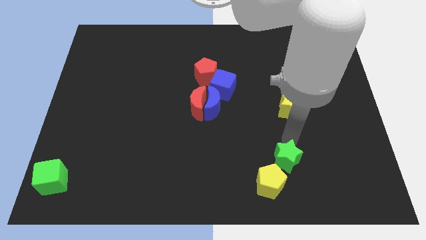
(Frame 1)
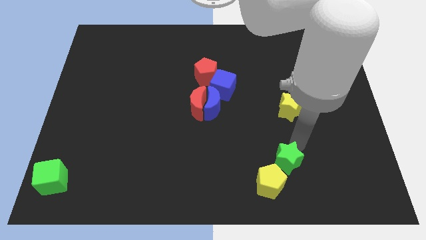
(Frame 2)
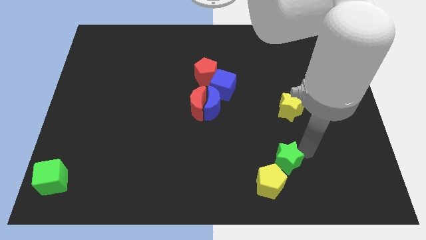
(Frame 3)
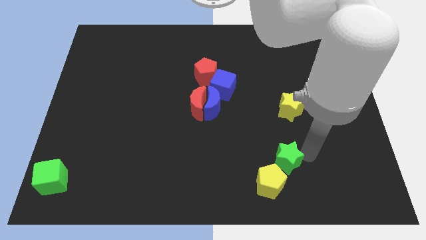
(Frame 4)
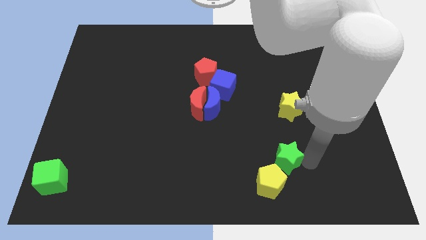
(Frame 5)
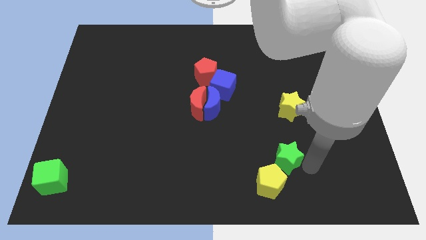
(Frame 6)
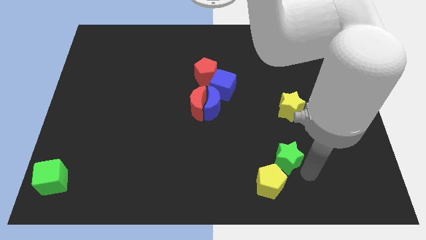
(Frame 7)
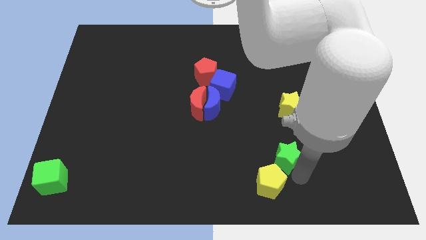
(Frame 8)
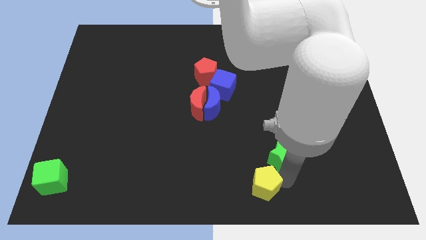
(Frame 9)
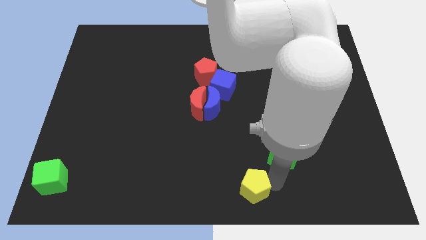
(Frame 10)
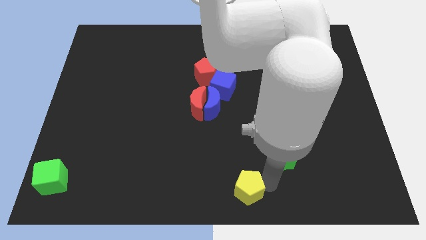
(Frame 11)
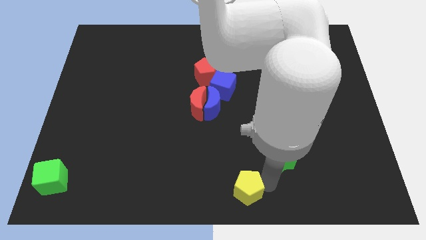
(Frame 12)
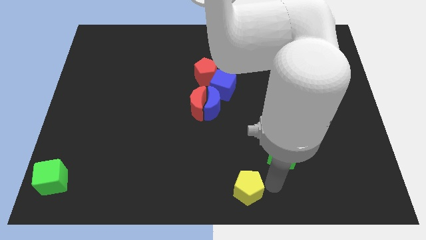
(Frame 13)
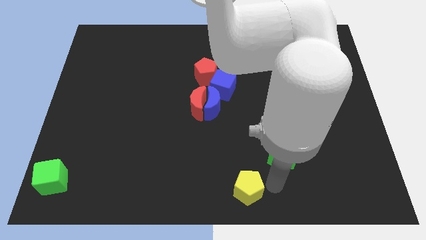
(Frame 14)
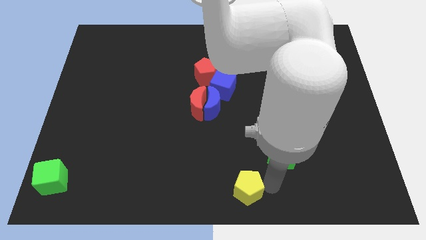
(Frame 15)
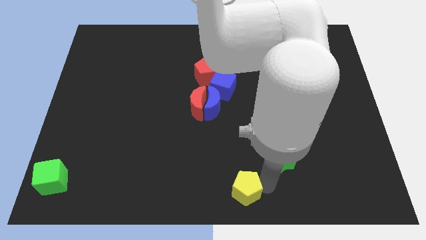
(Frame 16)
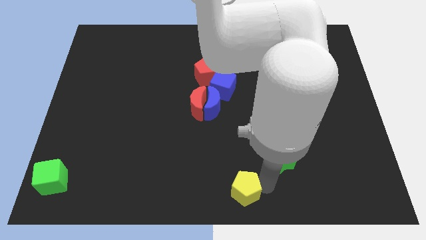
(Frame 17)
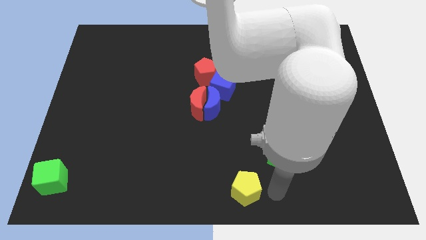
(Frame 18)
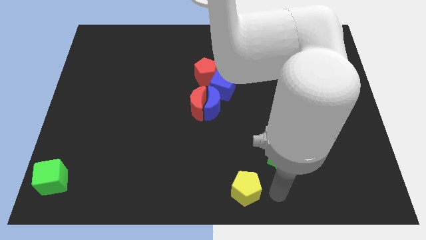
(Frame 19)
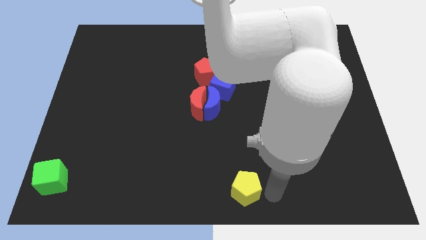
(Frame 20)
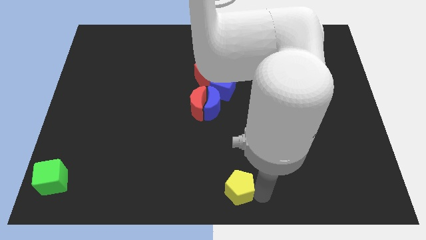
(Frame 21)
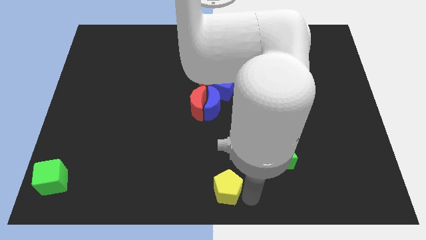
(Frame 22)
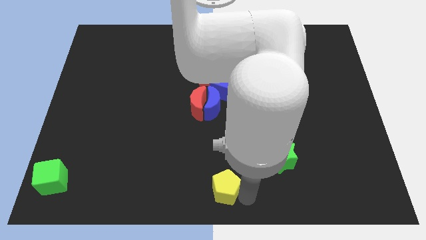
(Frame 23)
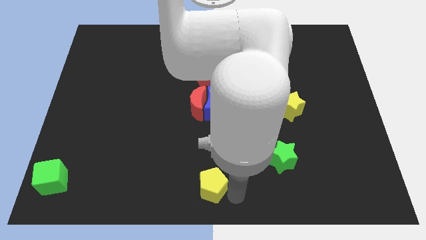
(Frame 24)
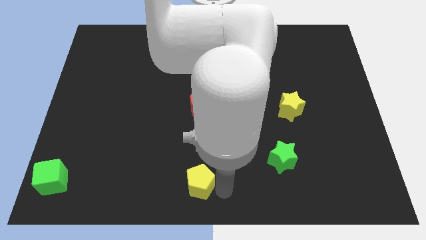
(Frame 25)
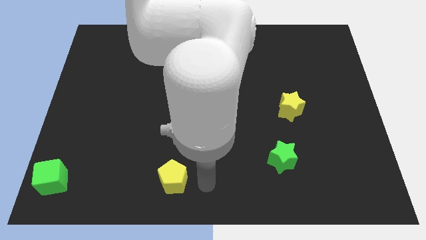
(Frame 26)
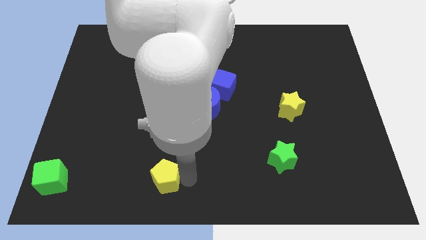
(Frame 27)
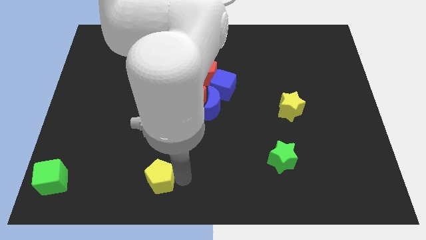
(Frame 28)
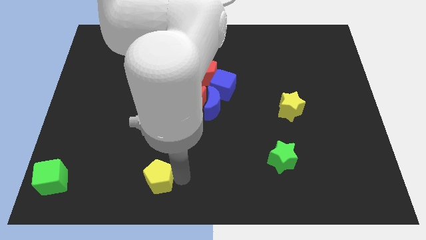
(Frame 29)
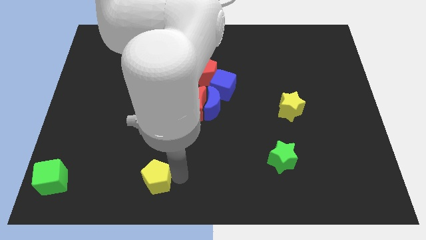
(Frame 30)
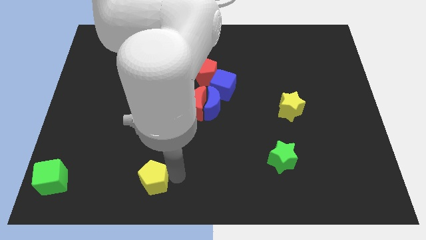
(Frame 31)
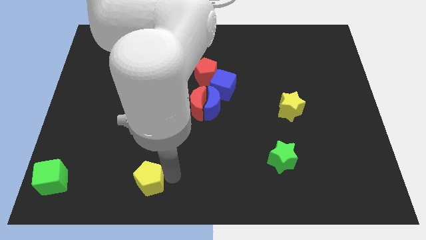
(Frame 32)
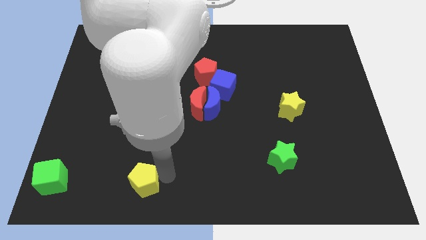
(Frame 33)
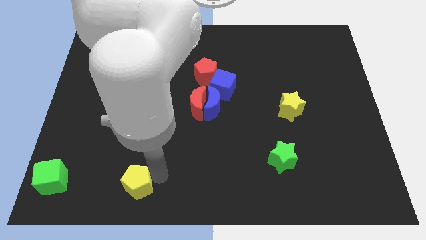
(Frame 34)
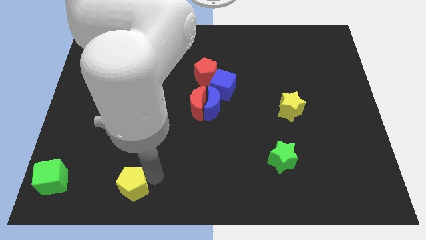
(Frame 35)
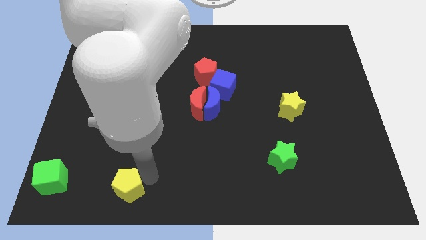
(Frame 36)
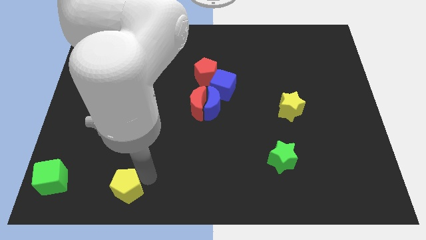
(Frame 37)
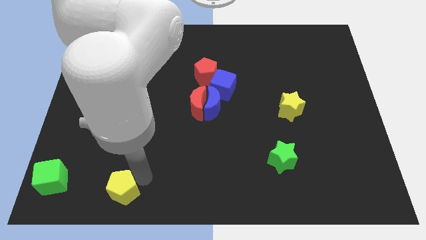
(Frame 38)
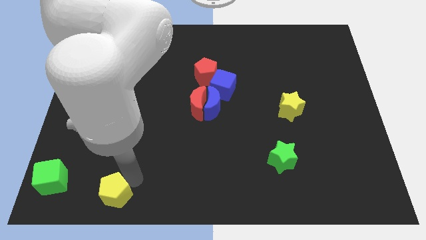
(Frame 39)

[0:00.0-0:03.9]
separate the yellow pentagon from the green star

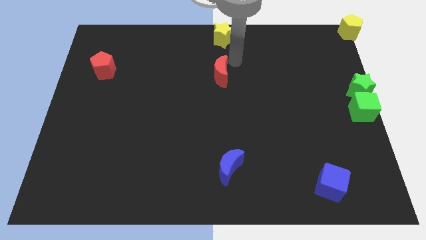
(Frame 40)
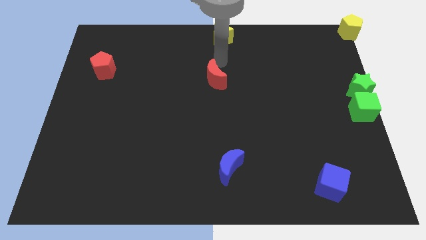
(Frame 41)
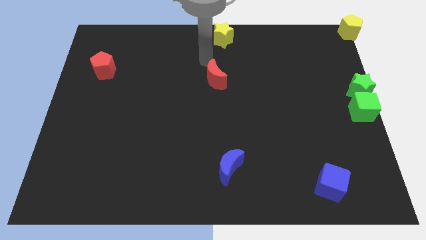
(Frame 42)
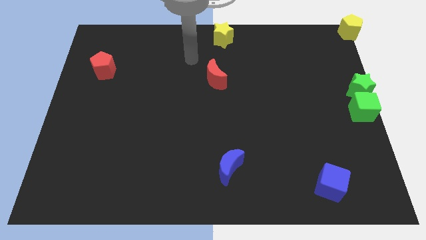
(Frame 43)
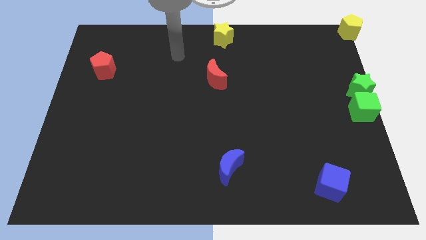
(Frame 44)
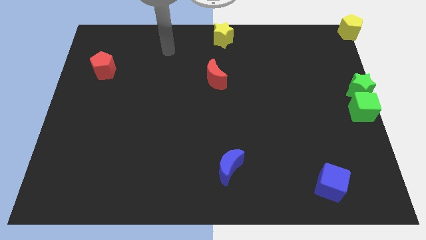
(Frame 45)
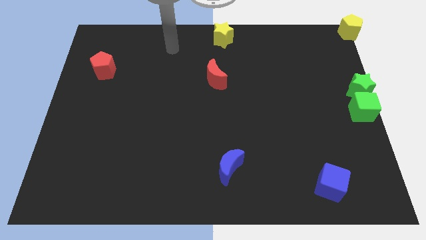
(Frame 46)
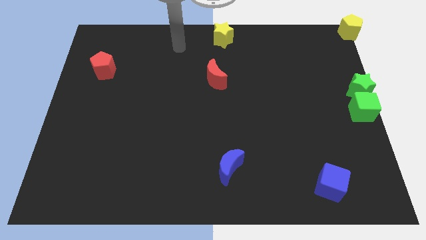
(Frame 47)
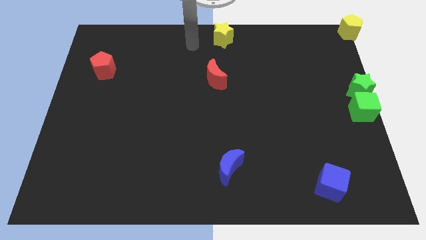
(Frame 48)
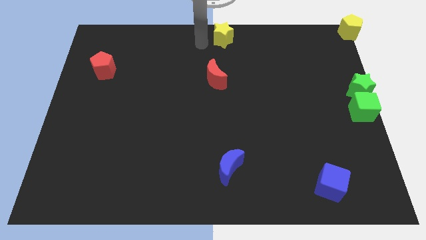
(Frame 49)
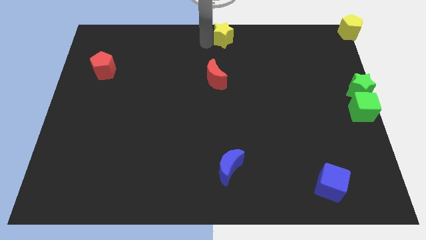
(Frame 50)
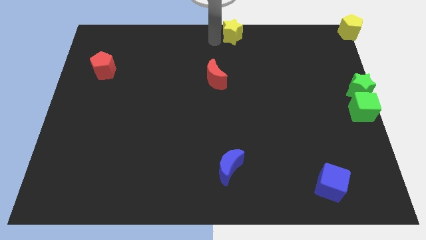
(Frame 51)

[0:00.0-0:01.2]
move your arm away from the red moon

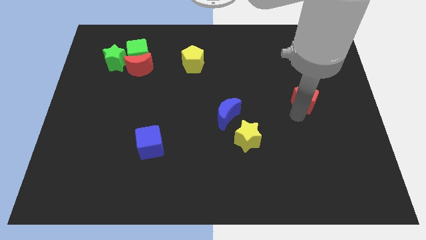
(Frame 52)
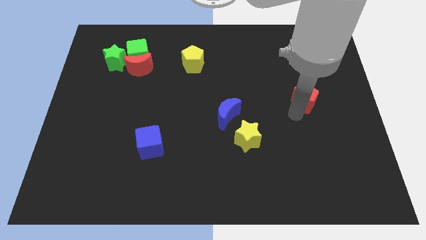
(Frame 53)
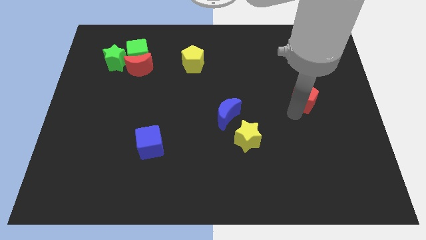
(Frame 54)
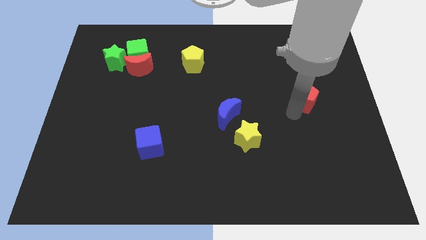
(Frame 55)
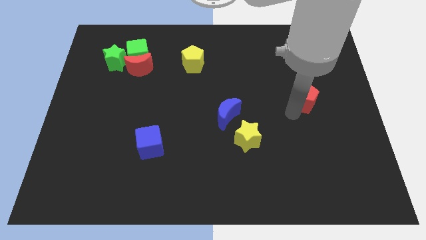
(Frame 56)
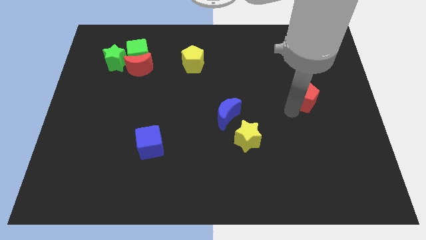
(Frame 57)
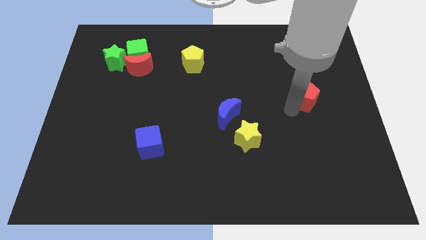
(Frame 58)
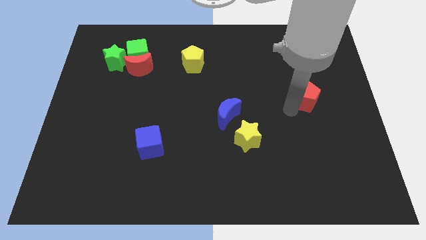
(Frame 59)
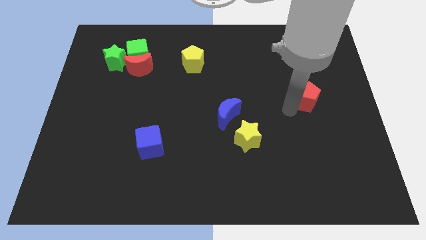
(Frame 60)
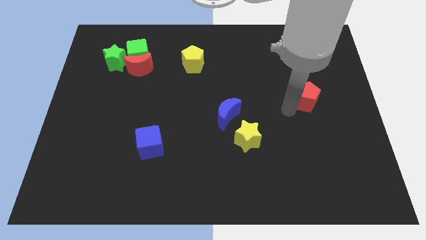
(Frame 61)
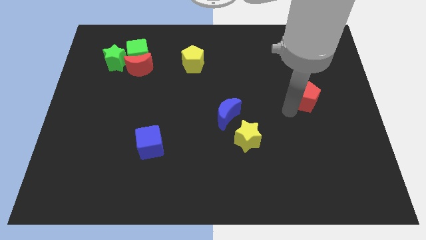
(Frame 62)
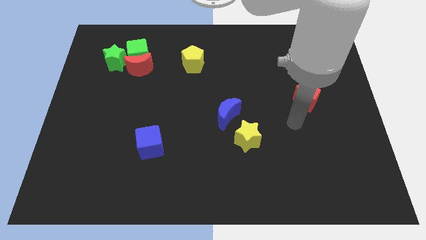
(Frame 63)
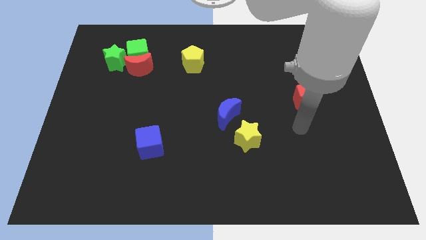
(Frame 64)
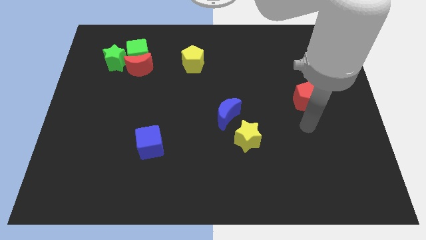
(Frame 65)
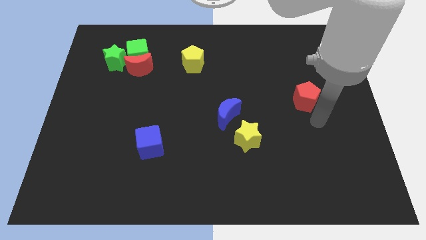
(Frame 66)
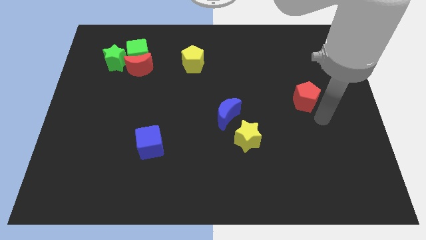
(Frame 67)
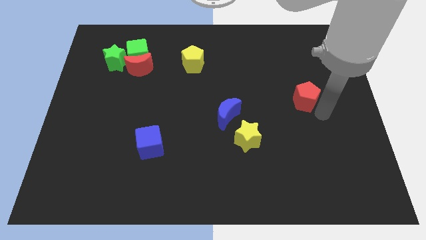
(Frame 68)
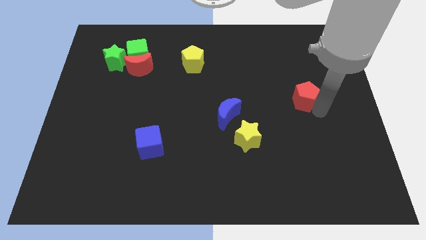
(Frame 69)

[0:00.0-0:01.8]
slide red pentagon towards the blue moon

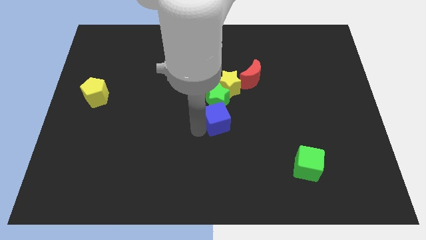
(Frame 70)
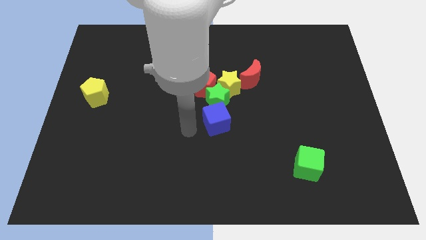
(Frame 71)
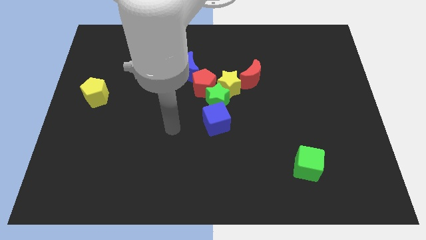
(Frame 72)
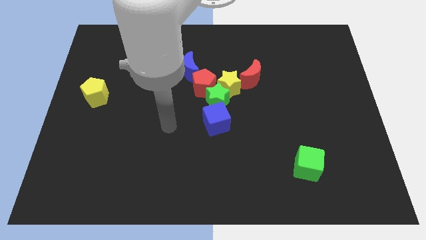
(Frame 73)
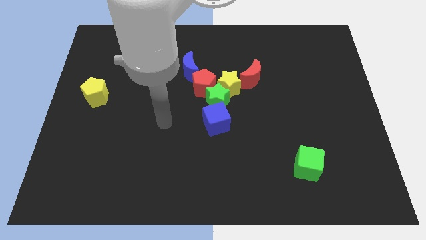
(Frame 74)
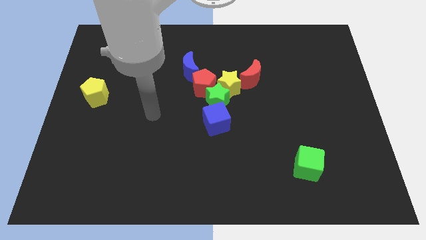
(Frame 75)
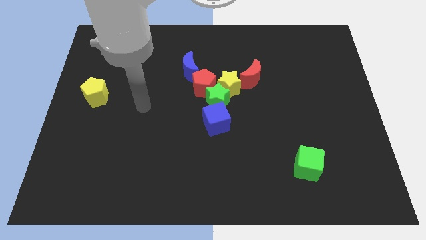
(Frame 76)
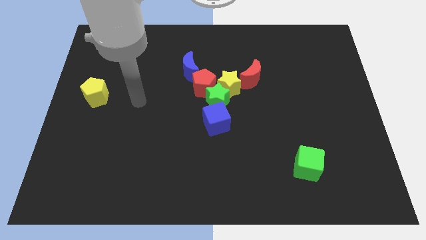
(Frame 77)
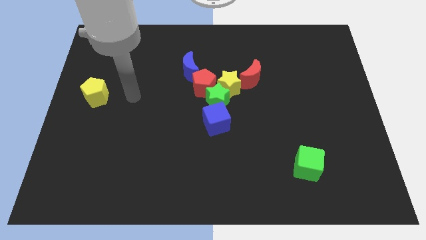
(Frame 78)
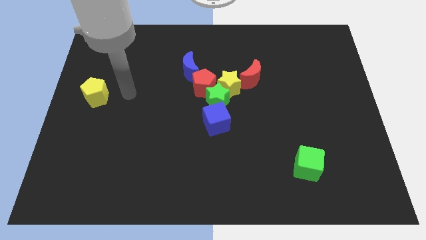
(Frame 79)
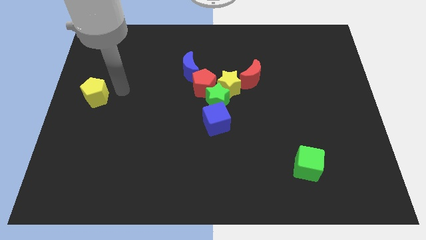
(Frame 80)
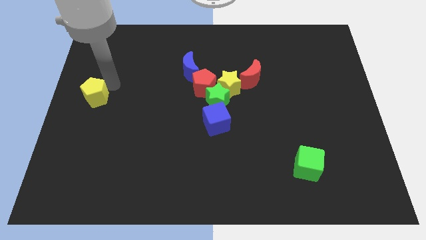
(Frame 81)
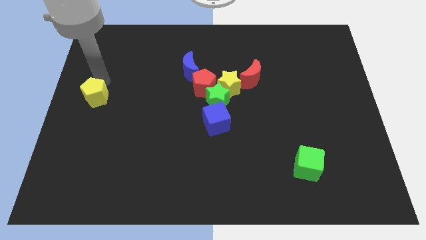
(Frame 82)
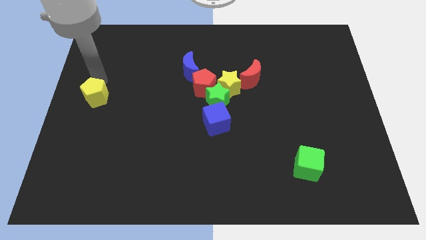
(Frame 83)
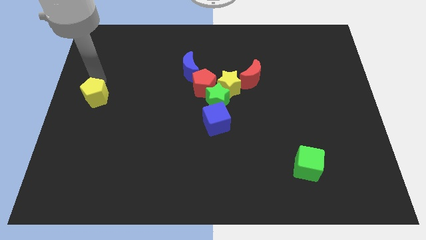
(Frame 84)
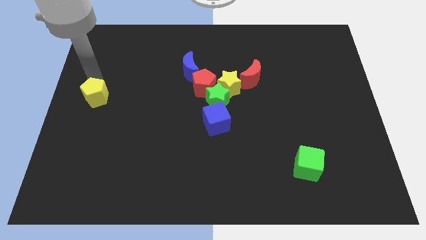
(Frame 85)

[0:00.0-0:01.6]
move the arm to the top of the yellow pentagon

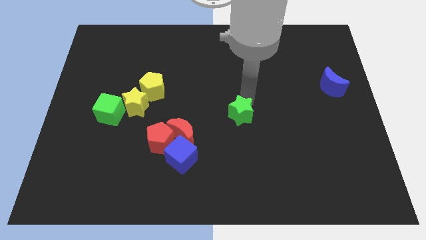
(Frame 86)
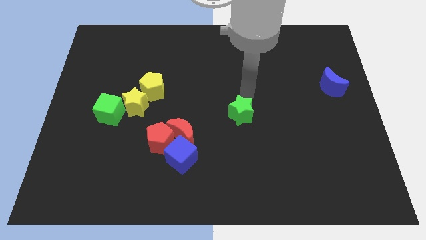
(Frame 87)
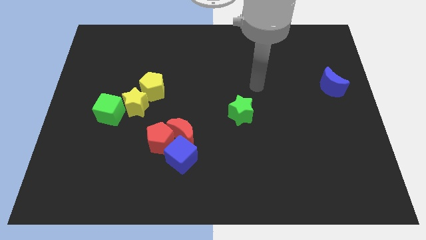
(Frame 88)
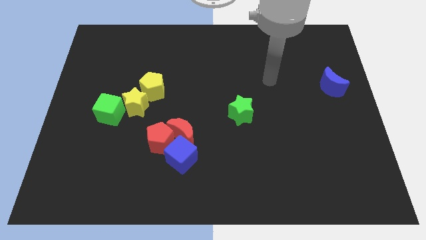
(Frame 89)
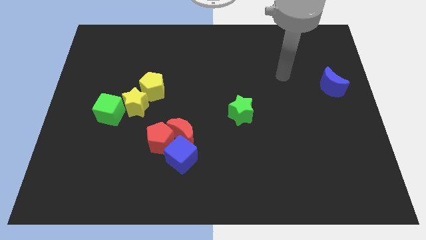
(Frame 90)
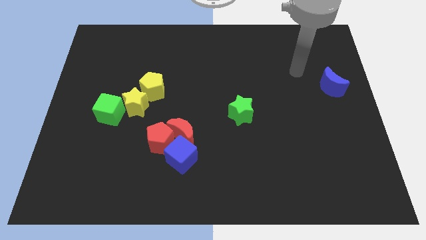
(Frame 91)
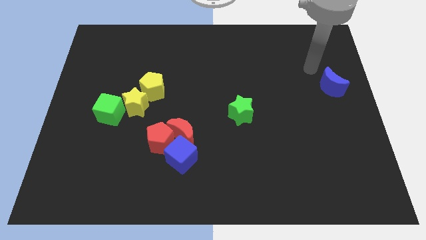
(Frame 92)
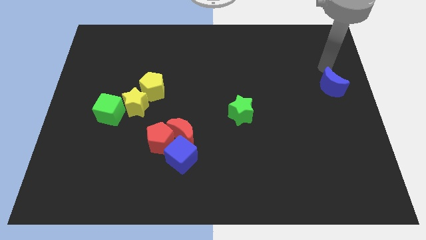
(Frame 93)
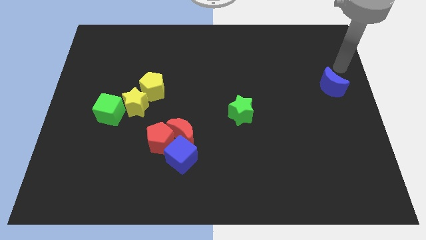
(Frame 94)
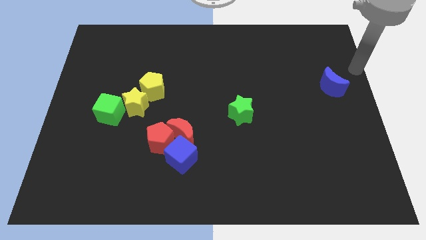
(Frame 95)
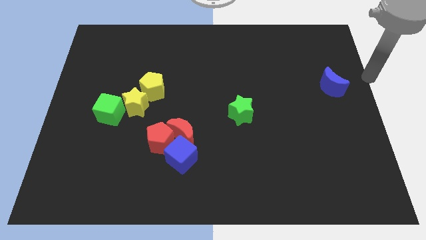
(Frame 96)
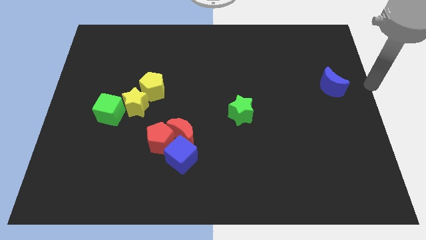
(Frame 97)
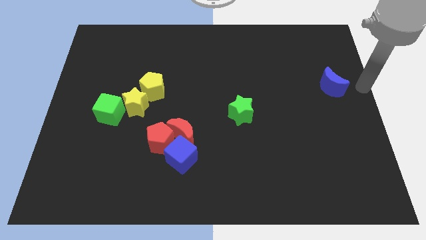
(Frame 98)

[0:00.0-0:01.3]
move your arm to the right of the blue crescent
